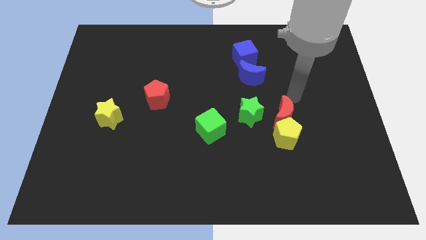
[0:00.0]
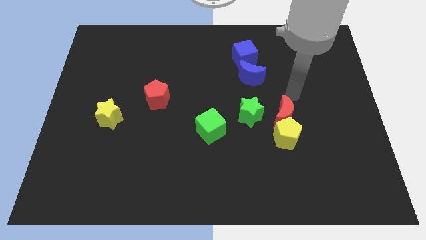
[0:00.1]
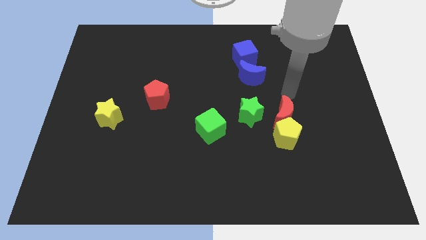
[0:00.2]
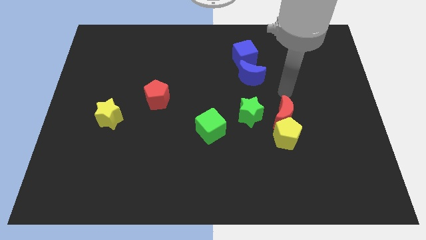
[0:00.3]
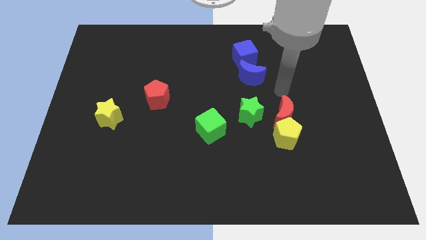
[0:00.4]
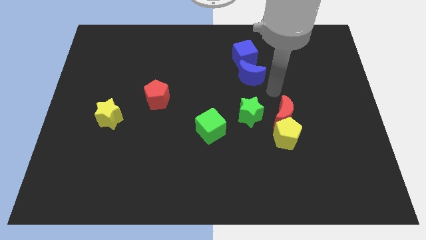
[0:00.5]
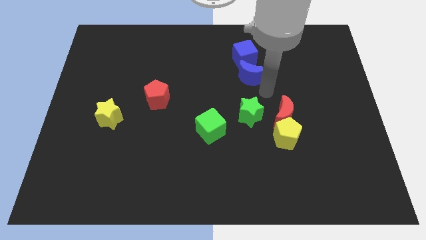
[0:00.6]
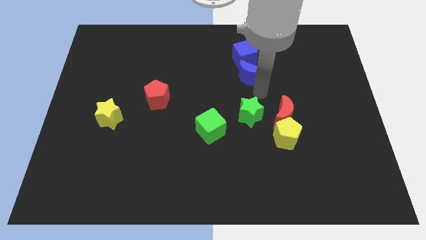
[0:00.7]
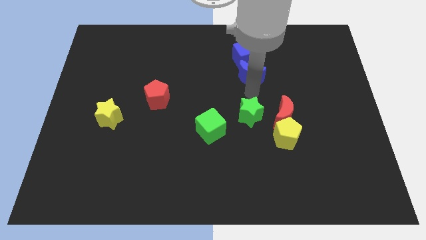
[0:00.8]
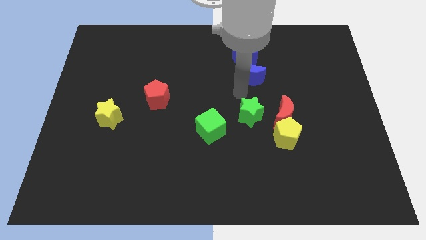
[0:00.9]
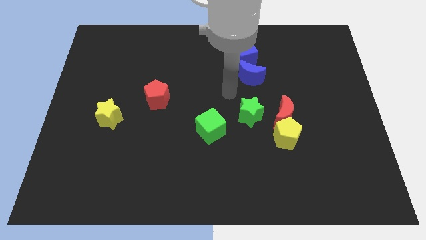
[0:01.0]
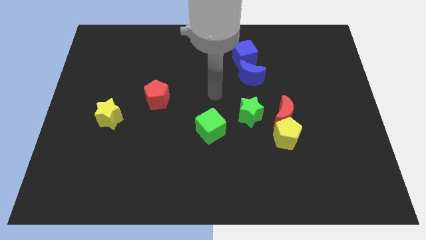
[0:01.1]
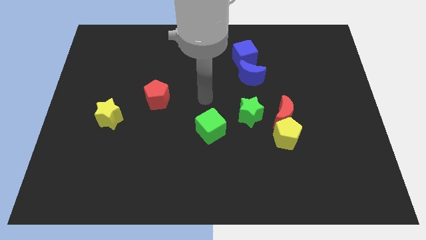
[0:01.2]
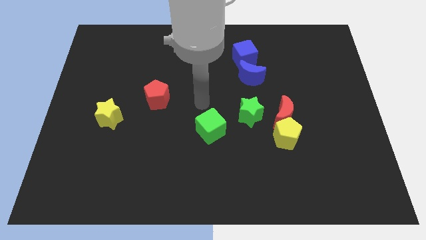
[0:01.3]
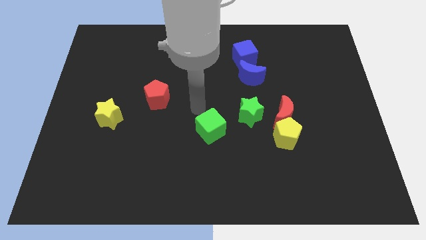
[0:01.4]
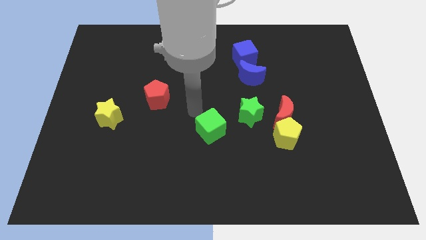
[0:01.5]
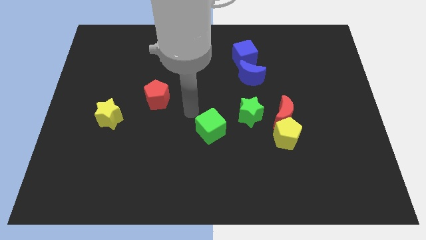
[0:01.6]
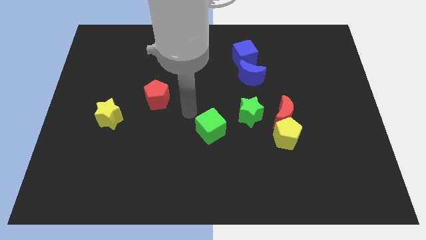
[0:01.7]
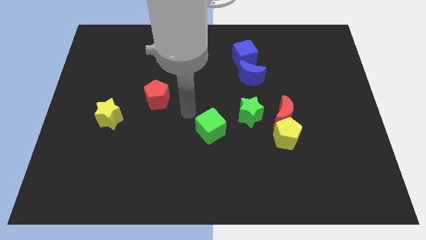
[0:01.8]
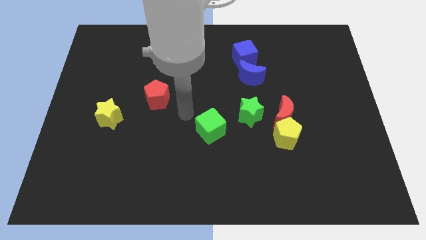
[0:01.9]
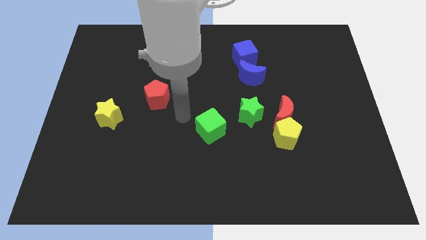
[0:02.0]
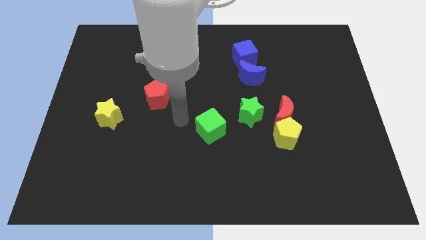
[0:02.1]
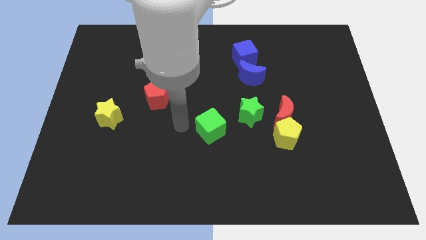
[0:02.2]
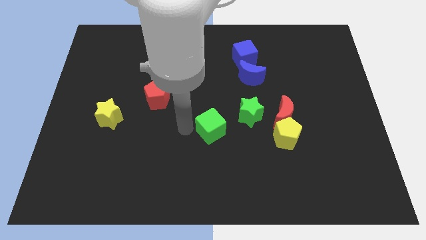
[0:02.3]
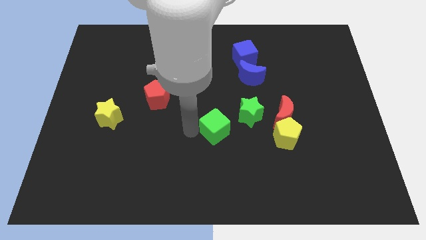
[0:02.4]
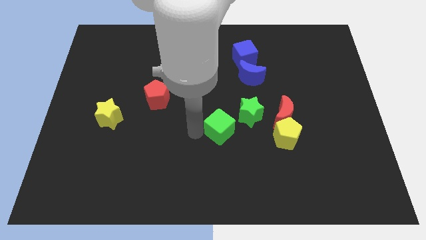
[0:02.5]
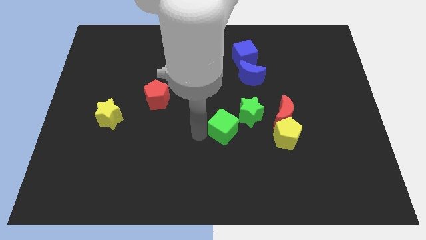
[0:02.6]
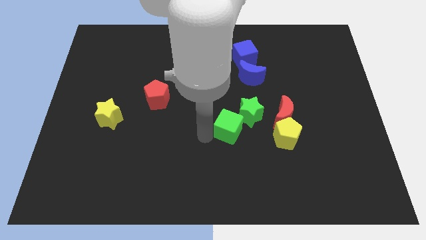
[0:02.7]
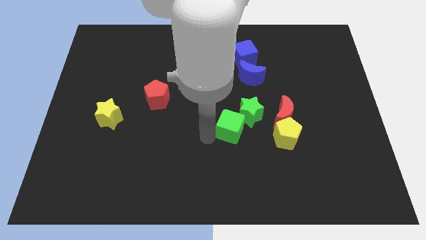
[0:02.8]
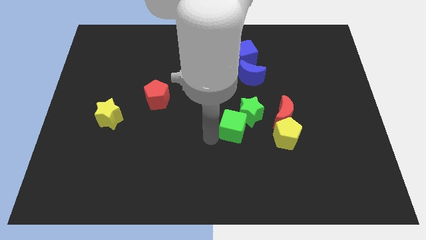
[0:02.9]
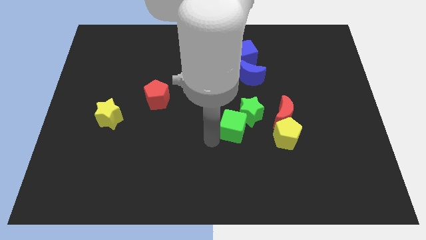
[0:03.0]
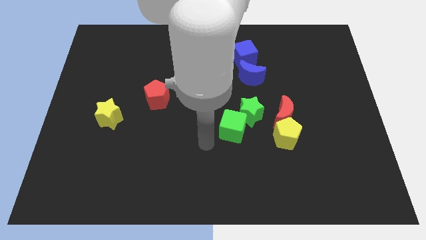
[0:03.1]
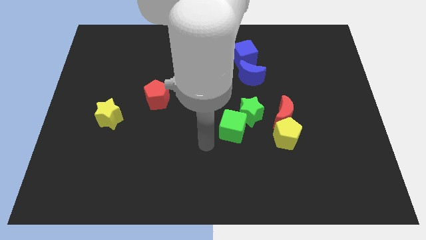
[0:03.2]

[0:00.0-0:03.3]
slide the green cube into the bottom of the green star

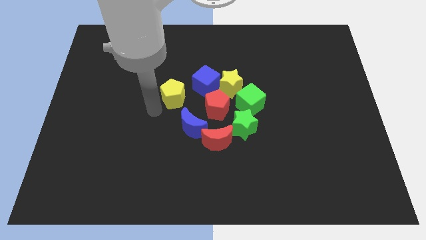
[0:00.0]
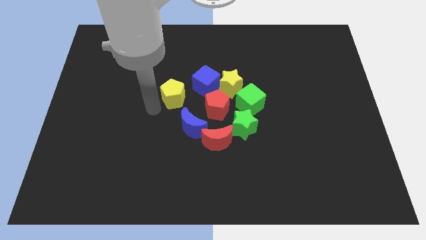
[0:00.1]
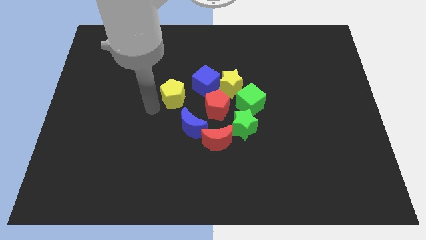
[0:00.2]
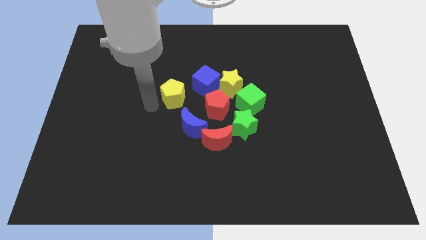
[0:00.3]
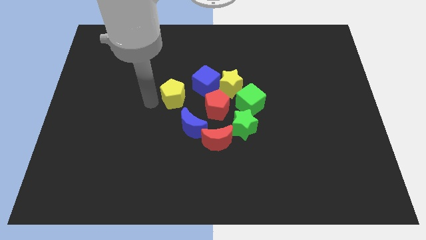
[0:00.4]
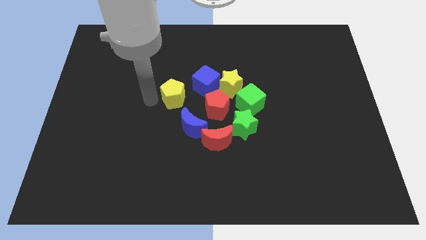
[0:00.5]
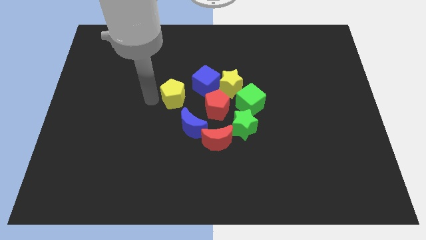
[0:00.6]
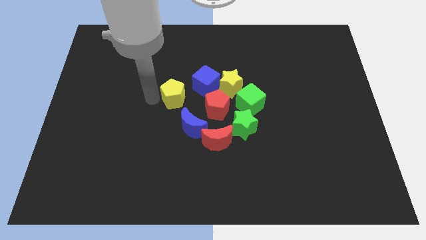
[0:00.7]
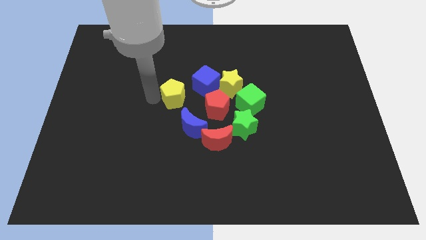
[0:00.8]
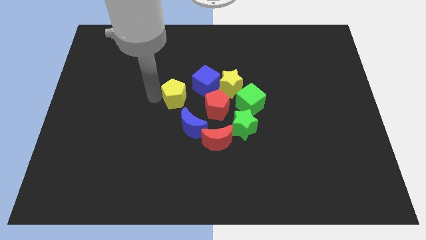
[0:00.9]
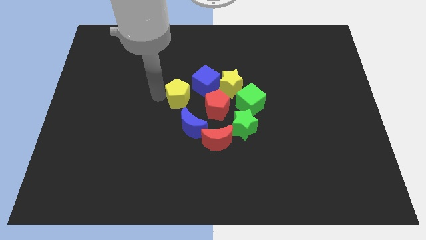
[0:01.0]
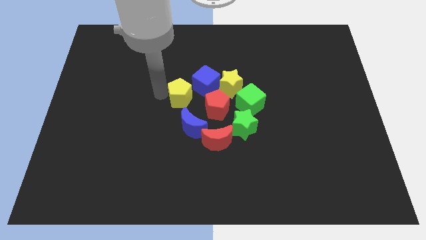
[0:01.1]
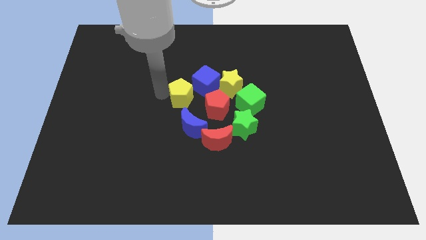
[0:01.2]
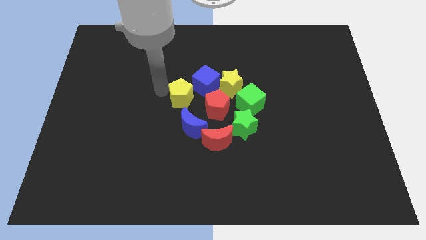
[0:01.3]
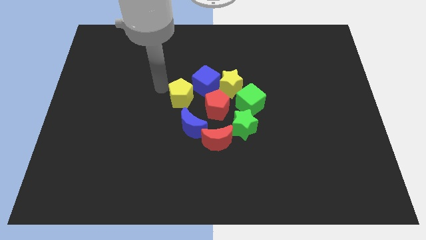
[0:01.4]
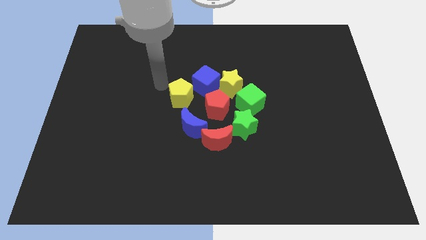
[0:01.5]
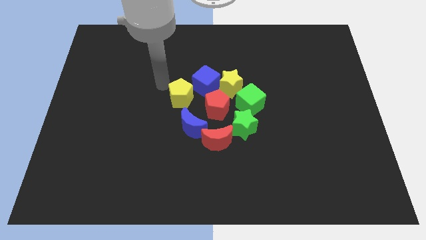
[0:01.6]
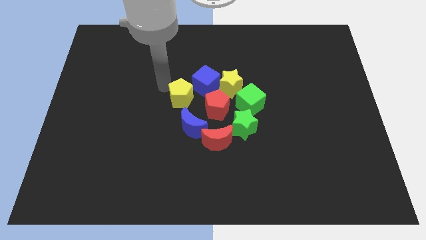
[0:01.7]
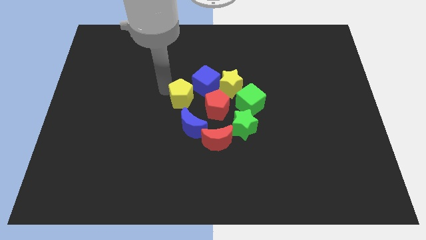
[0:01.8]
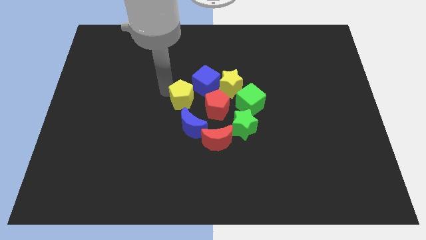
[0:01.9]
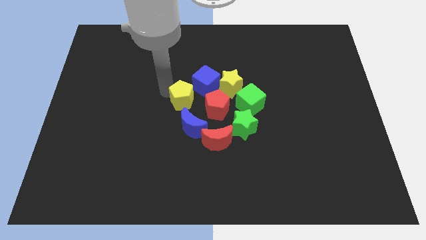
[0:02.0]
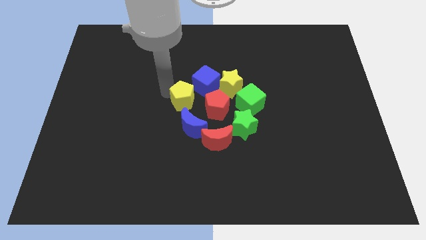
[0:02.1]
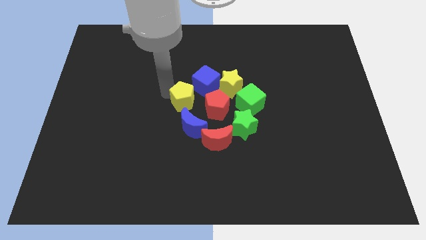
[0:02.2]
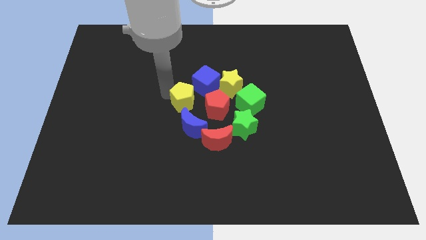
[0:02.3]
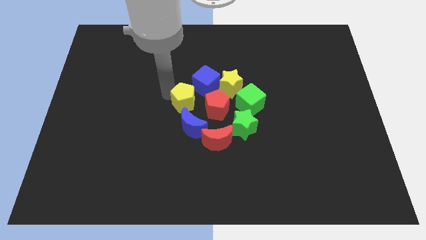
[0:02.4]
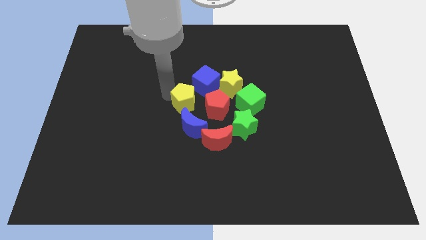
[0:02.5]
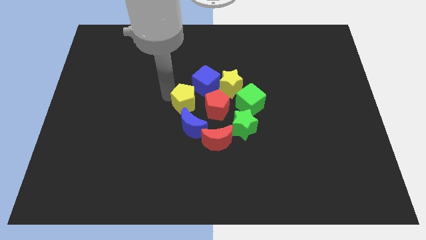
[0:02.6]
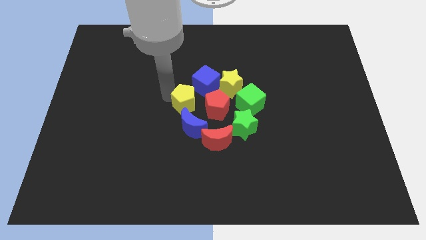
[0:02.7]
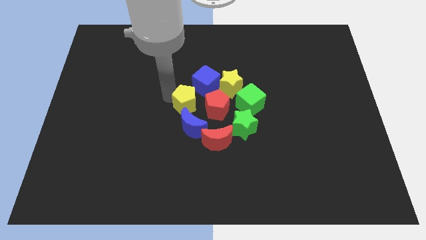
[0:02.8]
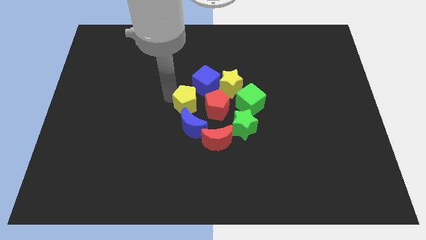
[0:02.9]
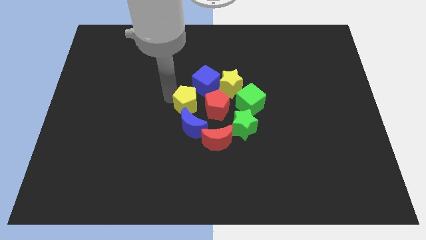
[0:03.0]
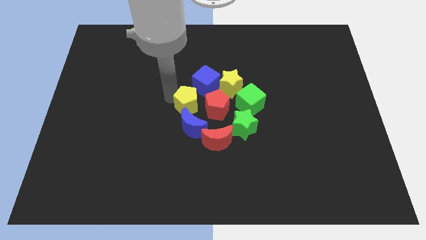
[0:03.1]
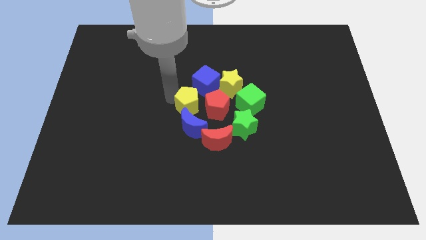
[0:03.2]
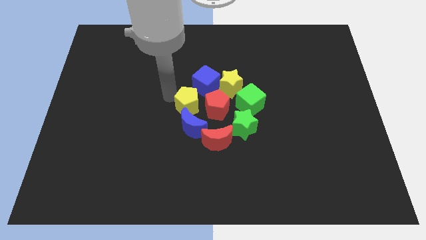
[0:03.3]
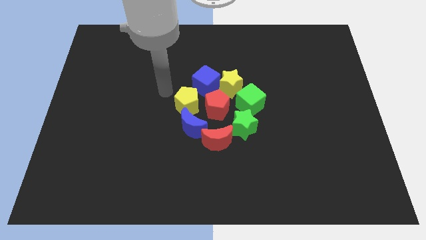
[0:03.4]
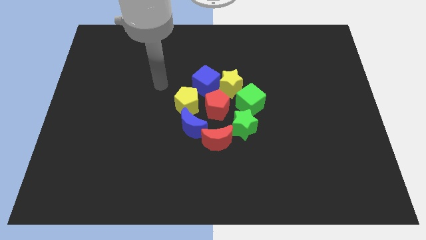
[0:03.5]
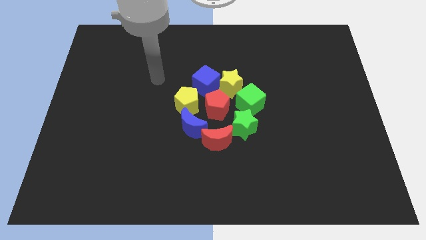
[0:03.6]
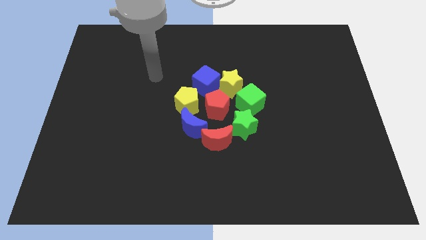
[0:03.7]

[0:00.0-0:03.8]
move yellow pentagon close to blue crescent

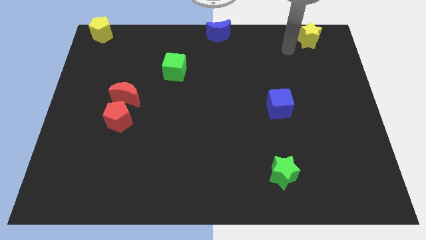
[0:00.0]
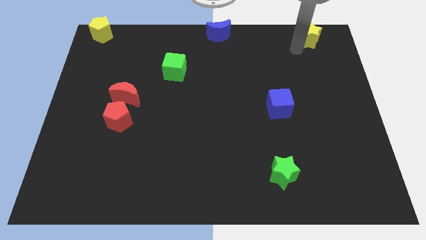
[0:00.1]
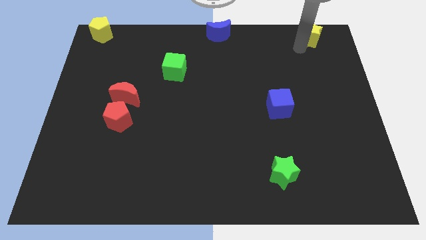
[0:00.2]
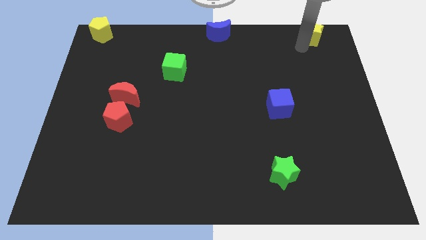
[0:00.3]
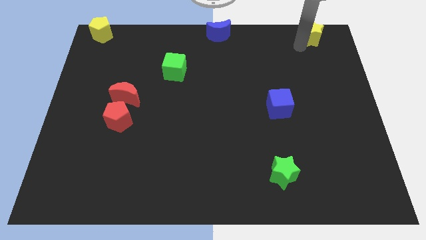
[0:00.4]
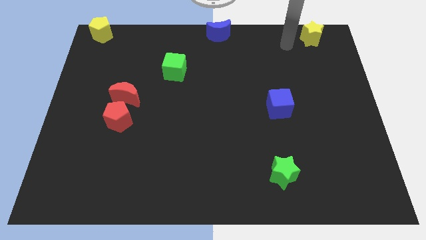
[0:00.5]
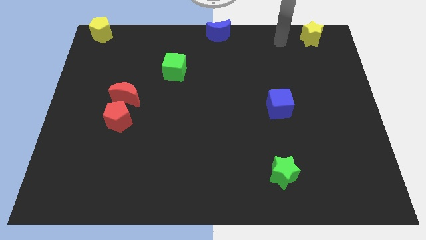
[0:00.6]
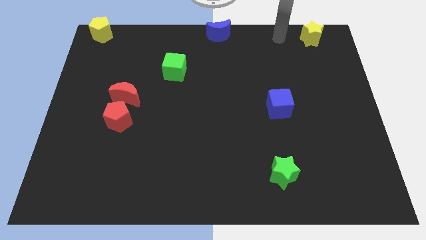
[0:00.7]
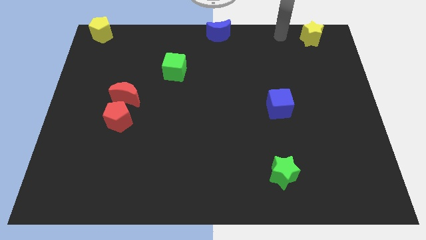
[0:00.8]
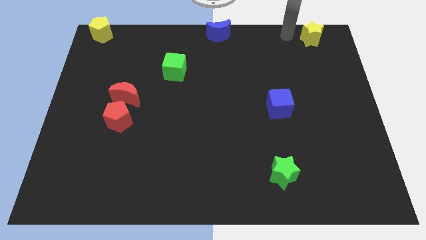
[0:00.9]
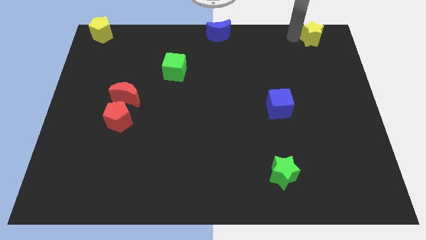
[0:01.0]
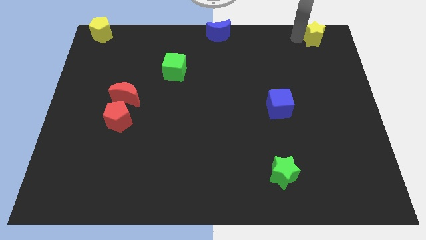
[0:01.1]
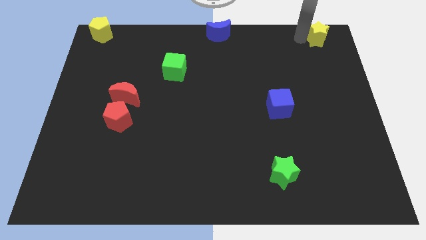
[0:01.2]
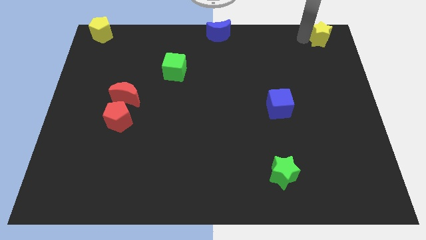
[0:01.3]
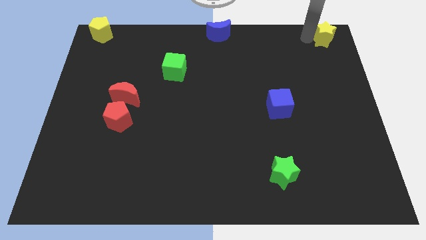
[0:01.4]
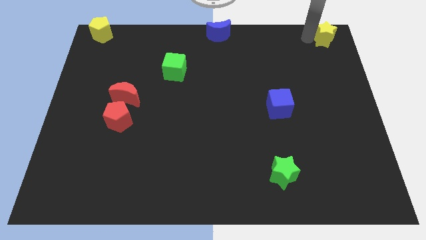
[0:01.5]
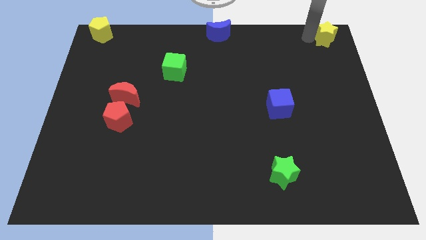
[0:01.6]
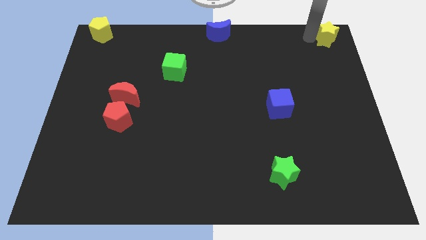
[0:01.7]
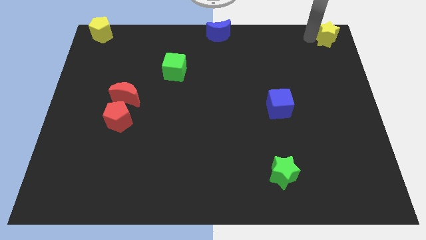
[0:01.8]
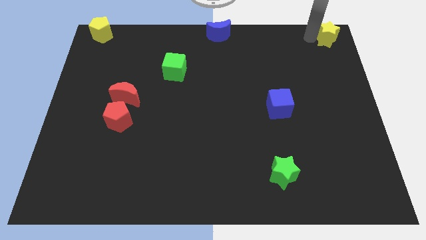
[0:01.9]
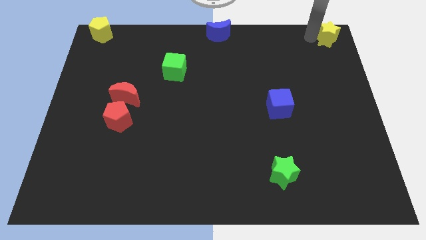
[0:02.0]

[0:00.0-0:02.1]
move yellow star in the top right corner
